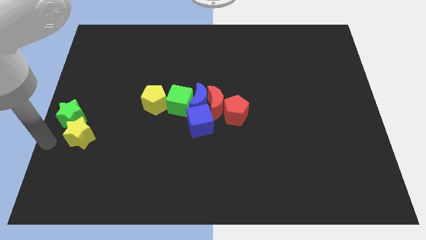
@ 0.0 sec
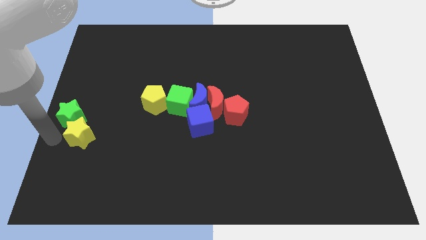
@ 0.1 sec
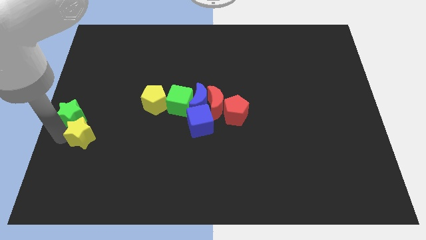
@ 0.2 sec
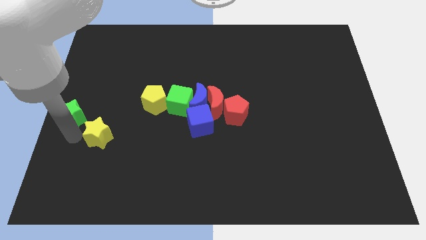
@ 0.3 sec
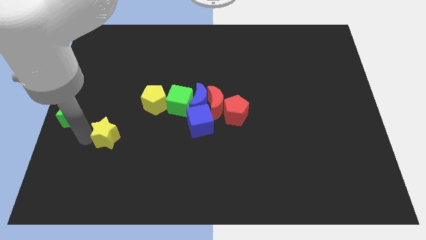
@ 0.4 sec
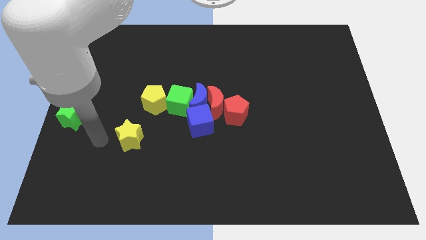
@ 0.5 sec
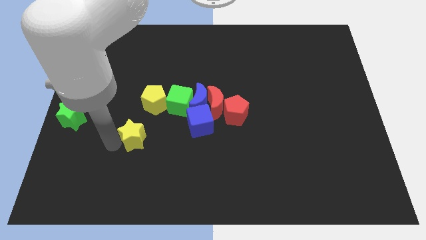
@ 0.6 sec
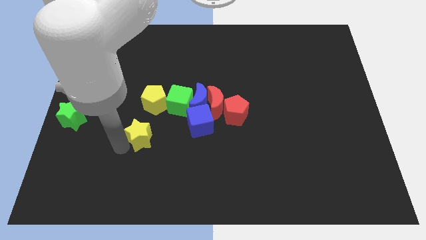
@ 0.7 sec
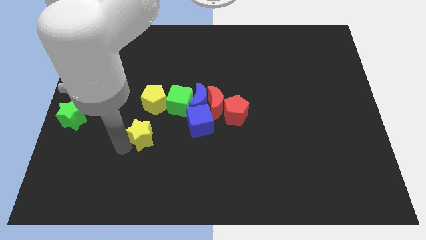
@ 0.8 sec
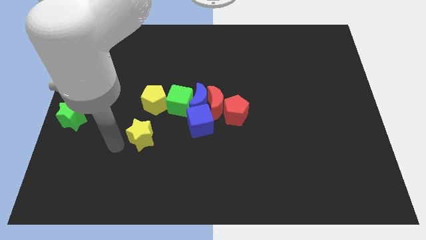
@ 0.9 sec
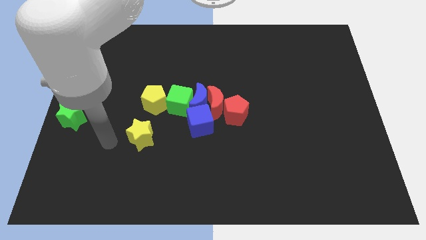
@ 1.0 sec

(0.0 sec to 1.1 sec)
separate the yellow star from green star

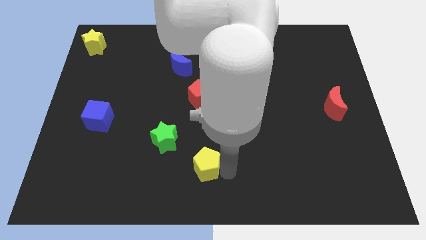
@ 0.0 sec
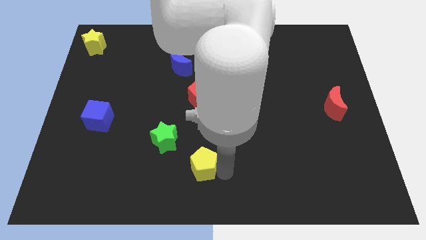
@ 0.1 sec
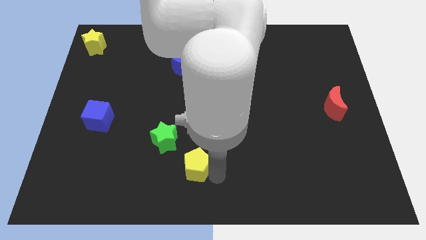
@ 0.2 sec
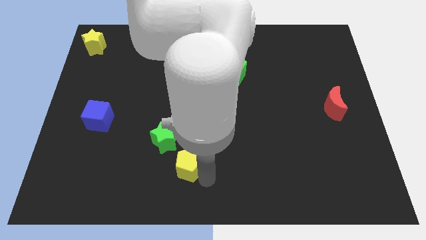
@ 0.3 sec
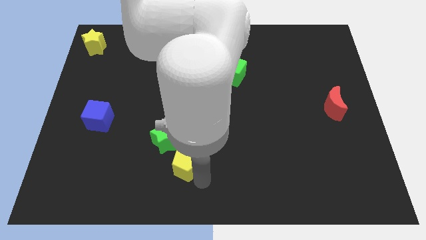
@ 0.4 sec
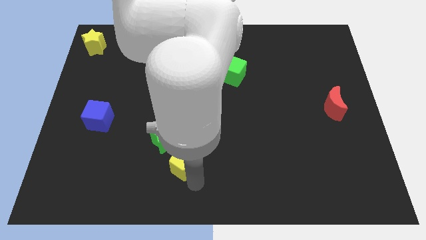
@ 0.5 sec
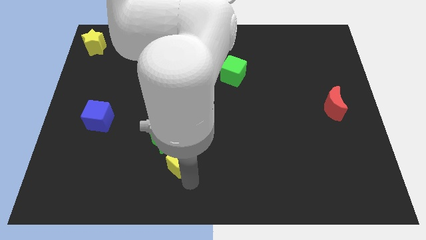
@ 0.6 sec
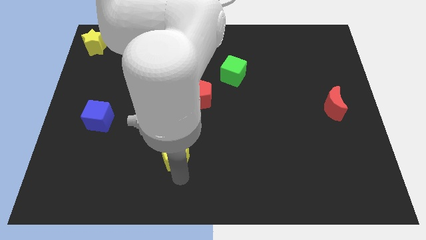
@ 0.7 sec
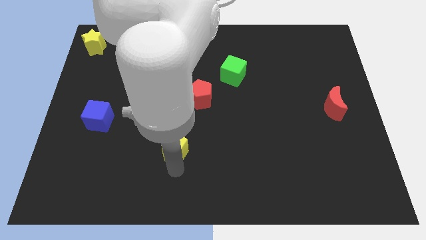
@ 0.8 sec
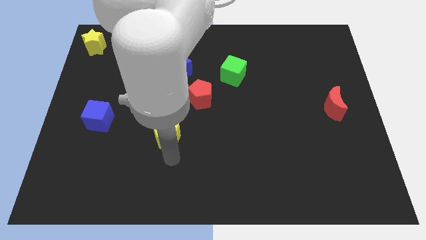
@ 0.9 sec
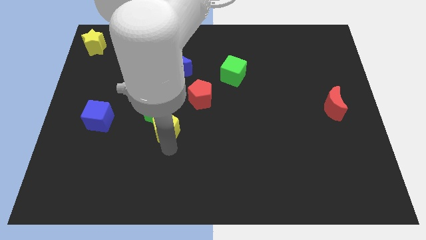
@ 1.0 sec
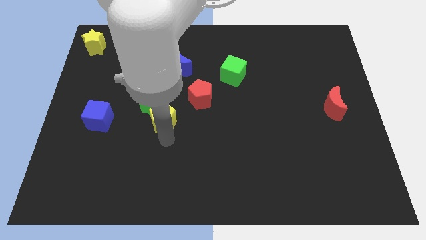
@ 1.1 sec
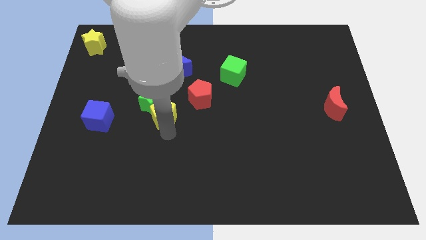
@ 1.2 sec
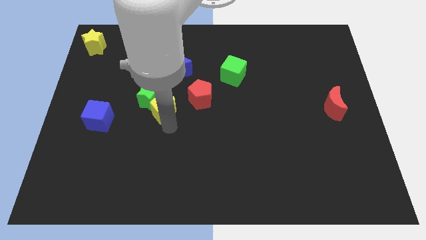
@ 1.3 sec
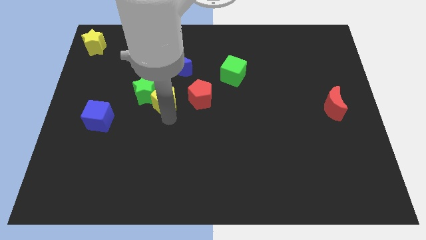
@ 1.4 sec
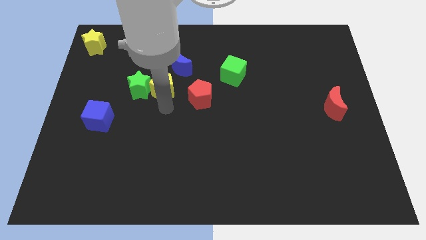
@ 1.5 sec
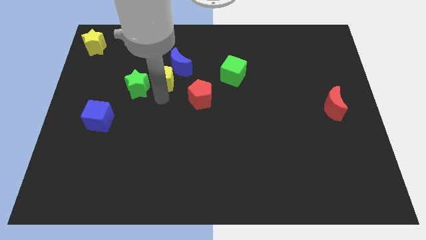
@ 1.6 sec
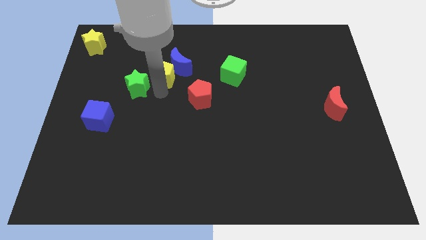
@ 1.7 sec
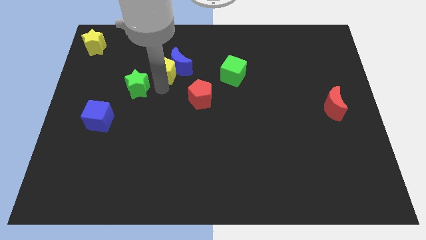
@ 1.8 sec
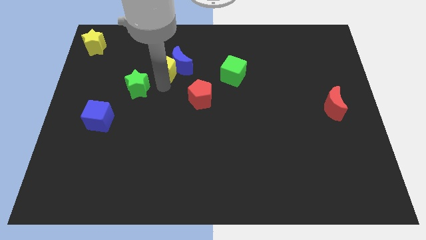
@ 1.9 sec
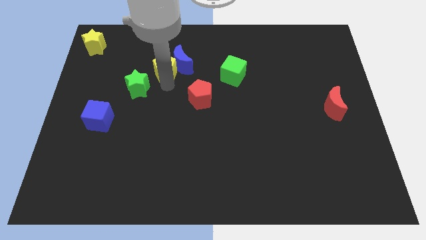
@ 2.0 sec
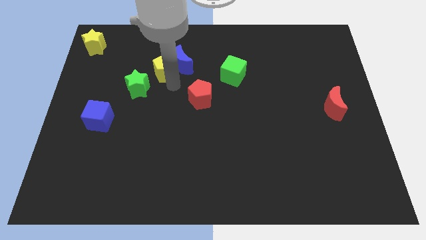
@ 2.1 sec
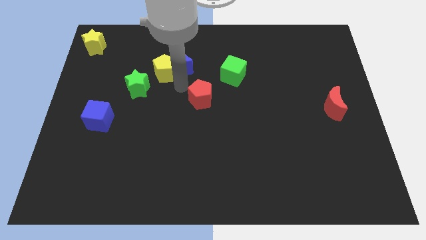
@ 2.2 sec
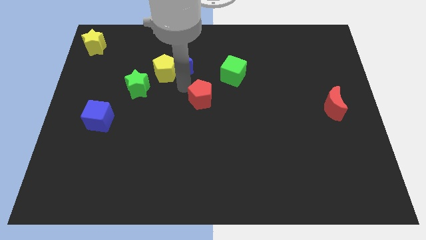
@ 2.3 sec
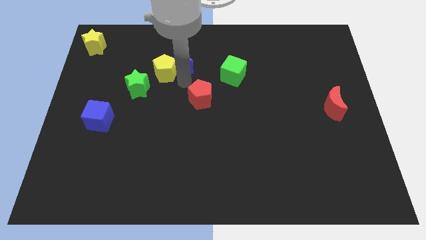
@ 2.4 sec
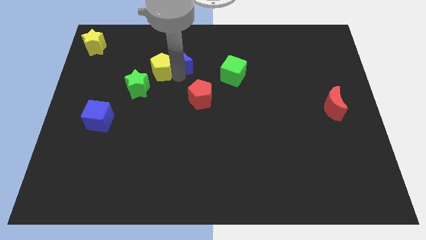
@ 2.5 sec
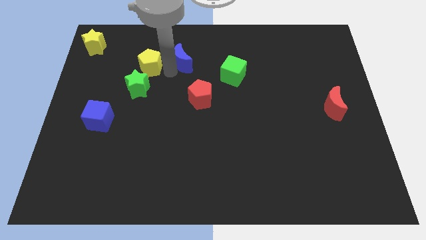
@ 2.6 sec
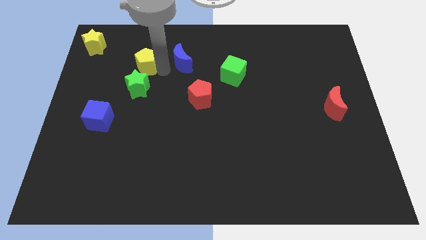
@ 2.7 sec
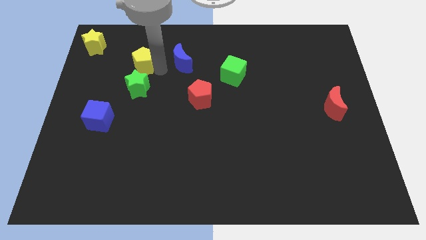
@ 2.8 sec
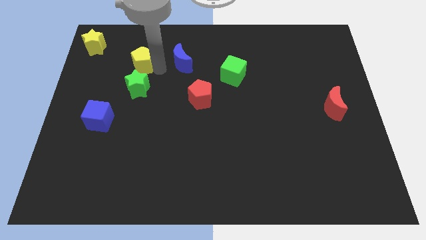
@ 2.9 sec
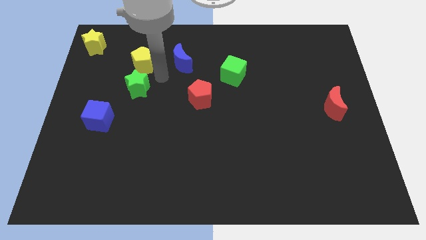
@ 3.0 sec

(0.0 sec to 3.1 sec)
place the yellow pentagon above the green star

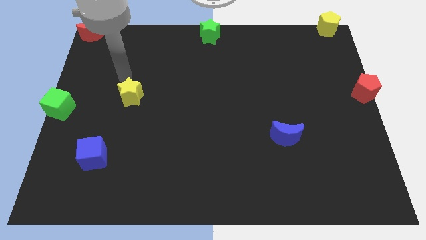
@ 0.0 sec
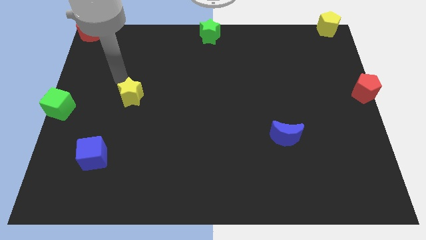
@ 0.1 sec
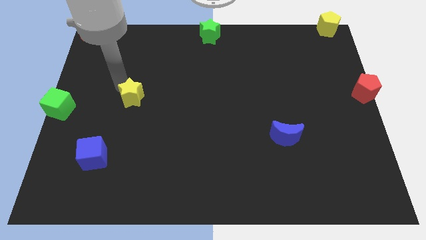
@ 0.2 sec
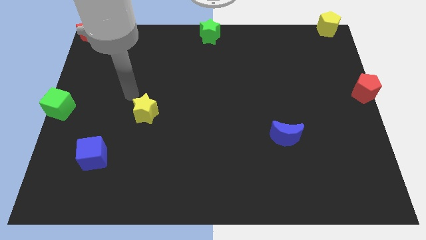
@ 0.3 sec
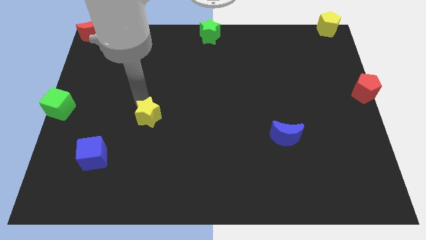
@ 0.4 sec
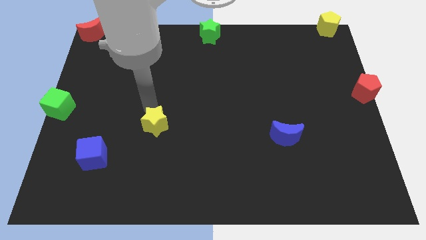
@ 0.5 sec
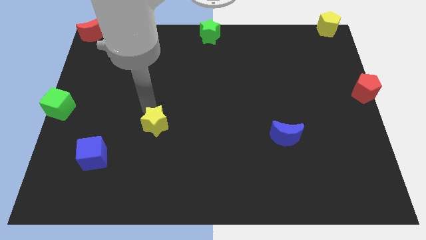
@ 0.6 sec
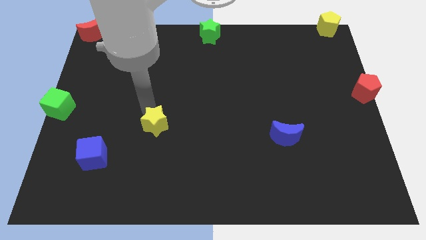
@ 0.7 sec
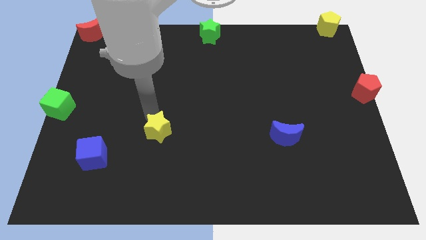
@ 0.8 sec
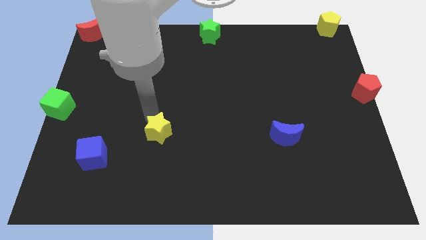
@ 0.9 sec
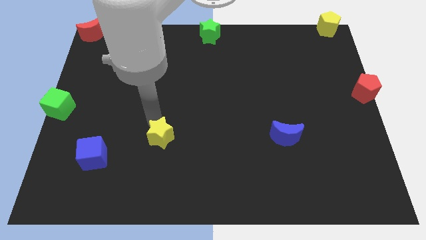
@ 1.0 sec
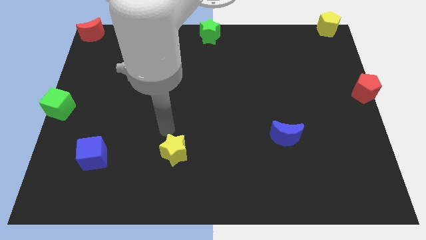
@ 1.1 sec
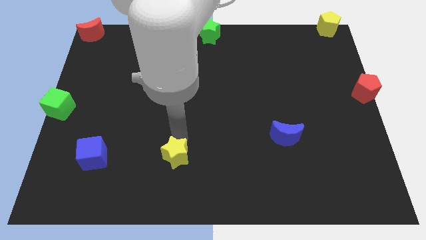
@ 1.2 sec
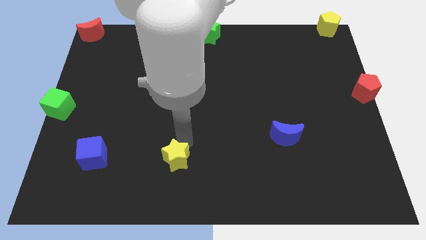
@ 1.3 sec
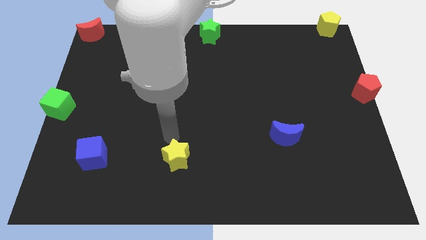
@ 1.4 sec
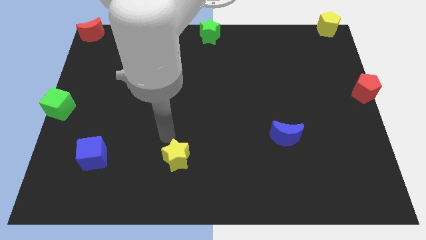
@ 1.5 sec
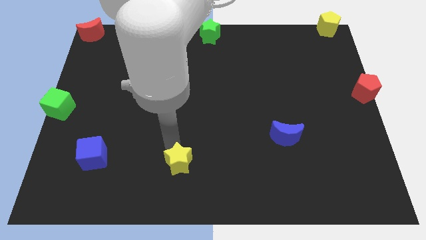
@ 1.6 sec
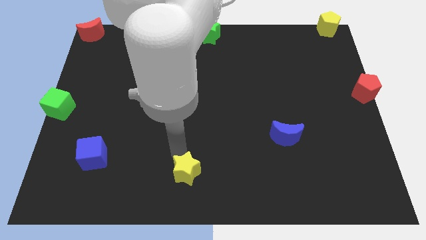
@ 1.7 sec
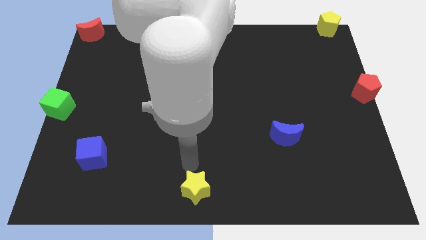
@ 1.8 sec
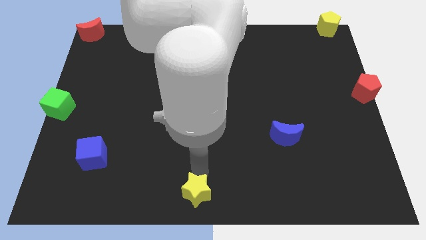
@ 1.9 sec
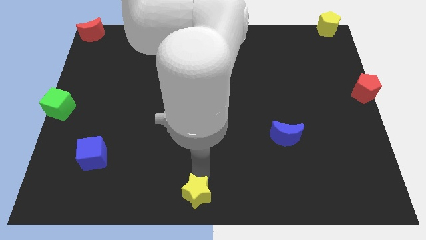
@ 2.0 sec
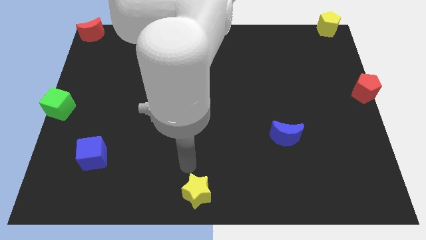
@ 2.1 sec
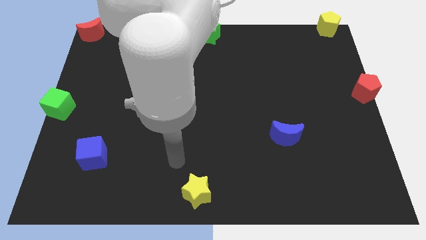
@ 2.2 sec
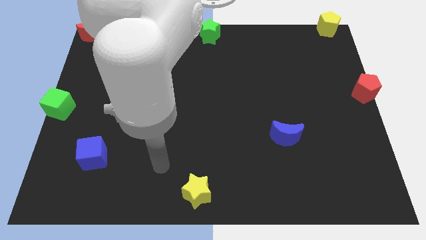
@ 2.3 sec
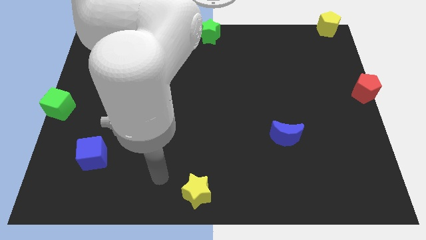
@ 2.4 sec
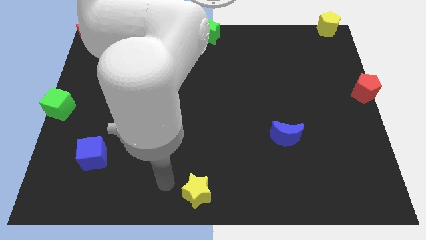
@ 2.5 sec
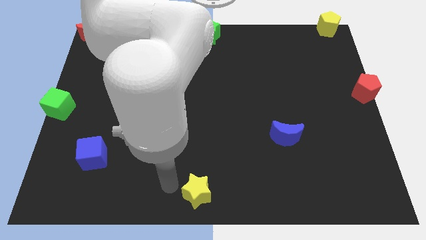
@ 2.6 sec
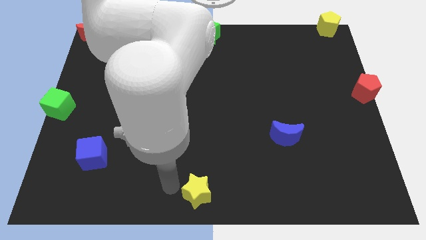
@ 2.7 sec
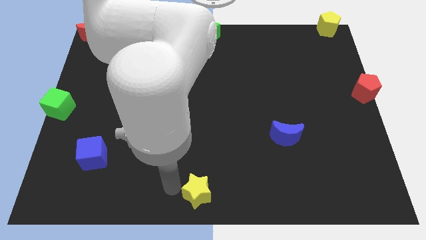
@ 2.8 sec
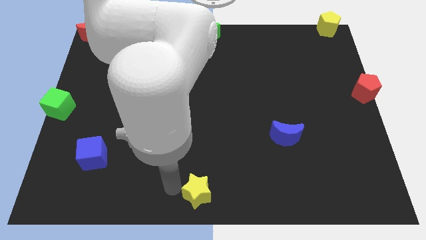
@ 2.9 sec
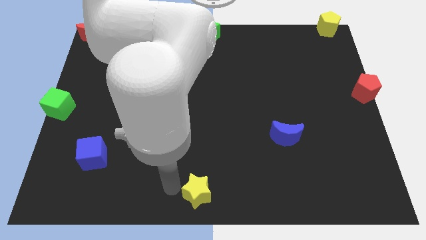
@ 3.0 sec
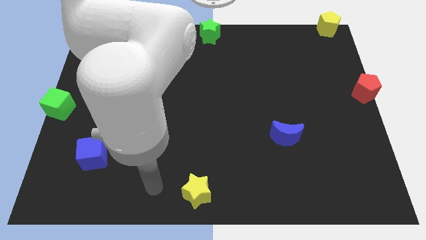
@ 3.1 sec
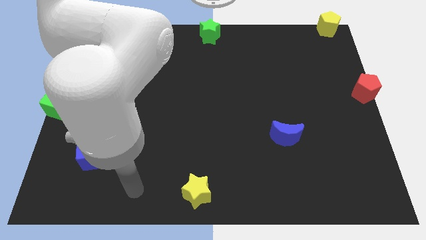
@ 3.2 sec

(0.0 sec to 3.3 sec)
move the yellow star to the bottom center of the board

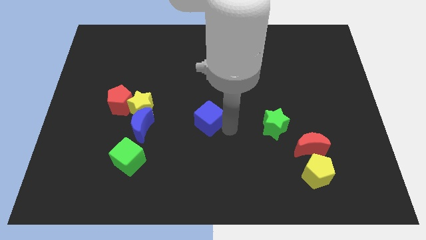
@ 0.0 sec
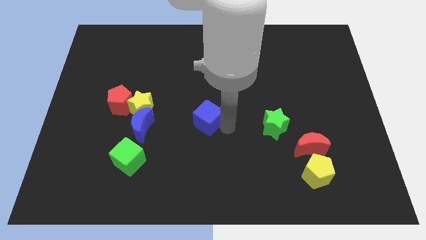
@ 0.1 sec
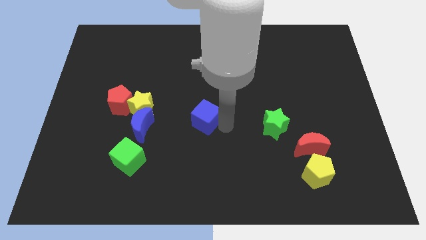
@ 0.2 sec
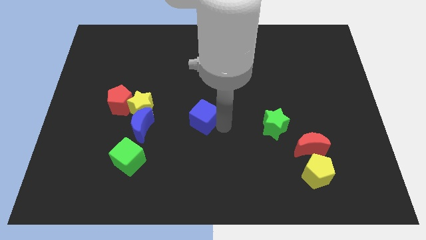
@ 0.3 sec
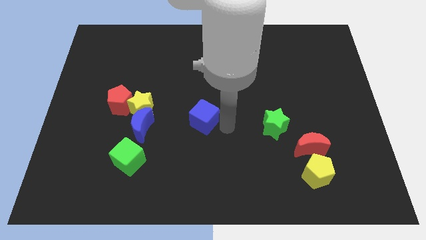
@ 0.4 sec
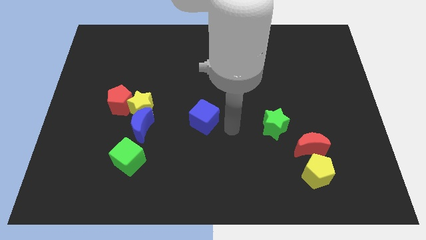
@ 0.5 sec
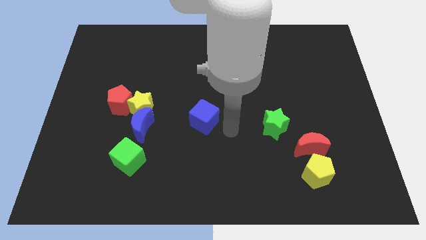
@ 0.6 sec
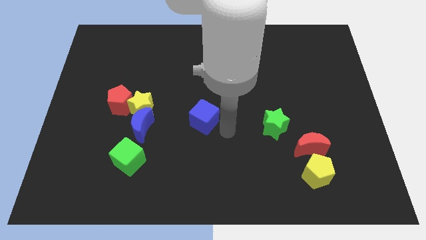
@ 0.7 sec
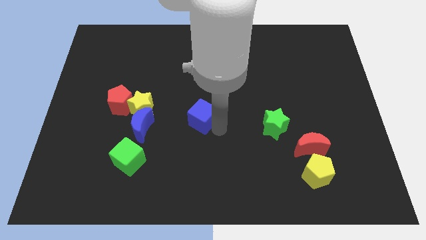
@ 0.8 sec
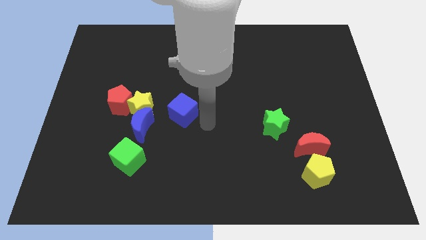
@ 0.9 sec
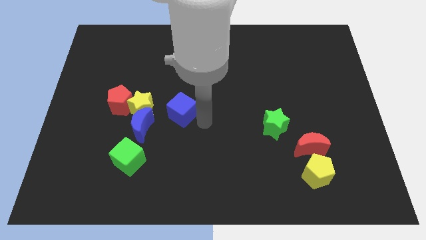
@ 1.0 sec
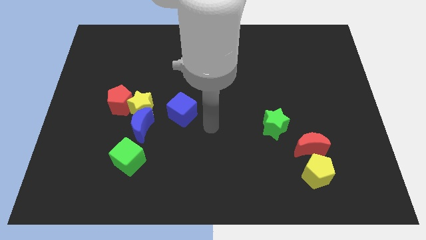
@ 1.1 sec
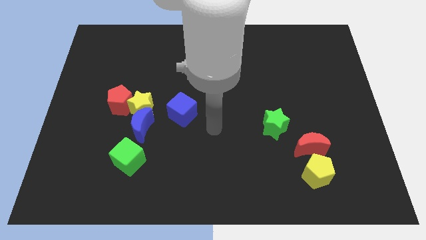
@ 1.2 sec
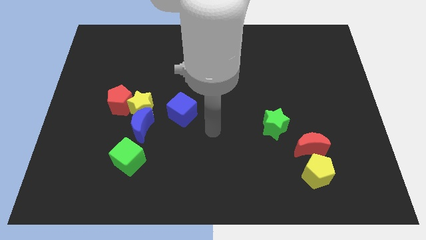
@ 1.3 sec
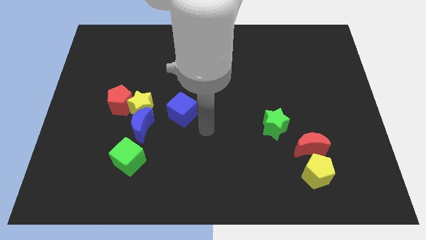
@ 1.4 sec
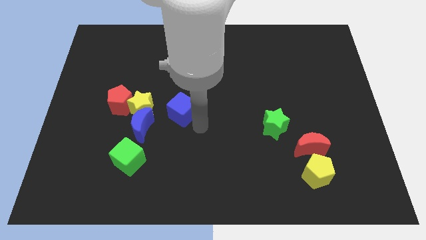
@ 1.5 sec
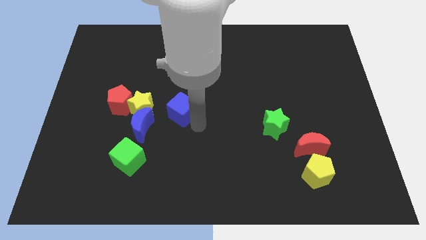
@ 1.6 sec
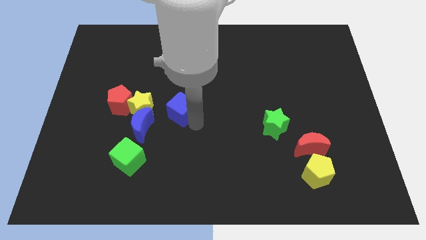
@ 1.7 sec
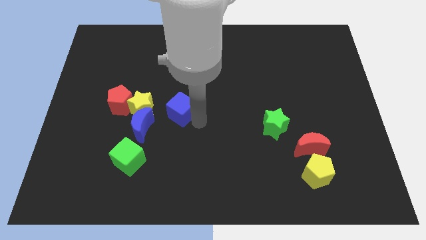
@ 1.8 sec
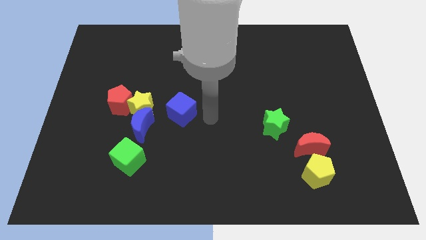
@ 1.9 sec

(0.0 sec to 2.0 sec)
slide the blue cube to the right of the yellow star
